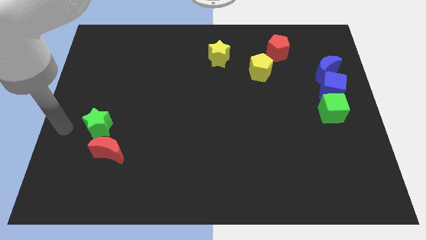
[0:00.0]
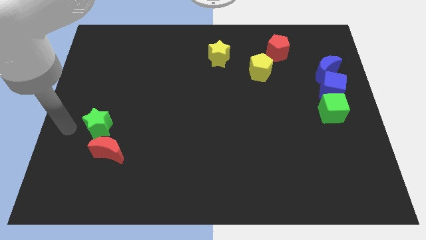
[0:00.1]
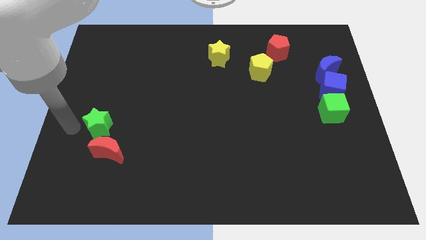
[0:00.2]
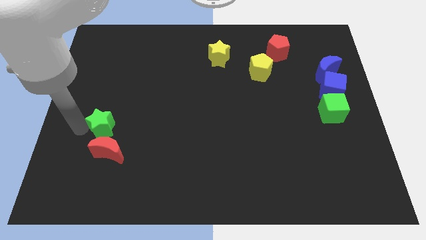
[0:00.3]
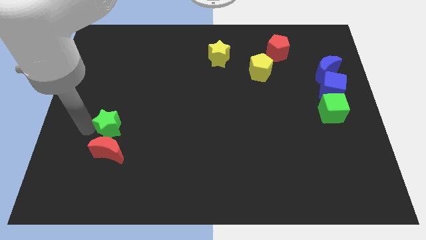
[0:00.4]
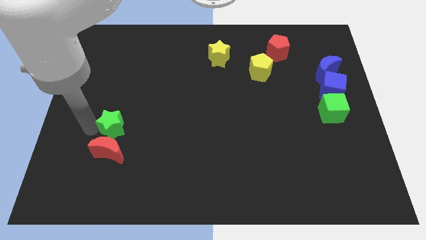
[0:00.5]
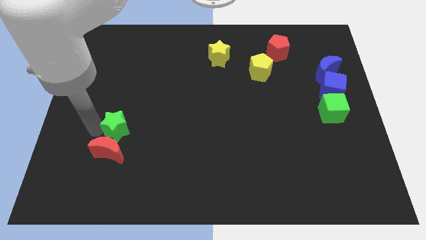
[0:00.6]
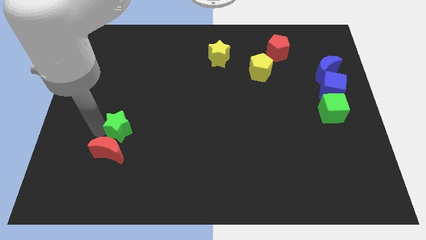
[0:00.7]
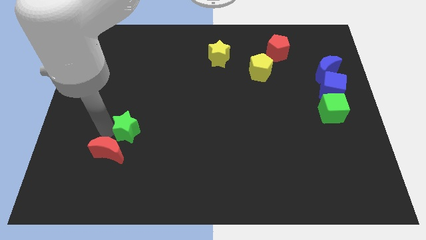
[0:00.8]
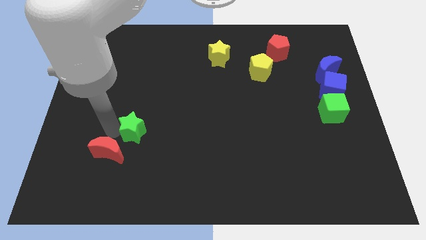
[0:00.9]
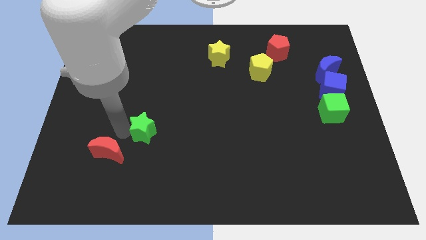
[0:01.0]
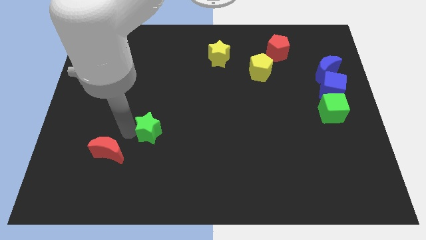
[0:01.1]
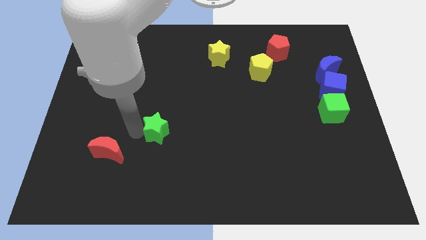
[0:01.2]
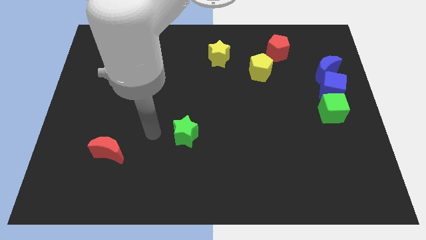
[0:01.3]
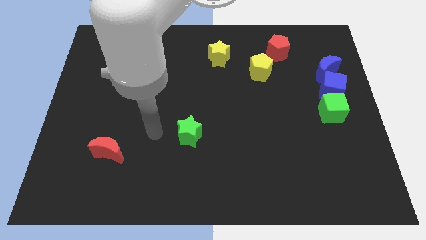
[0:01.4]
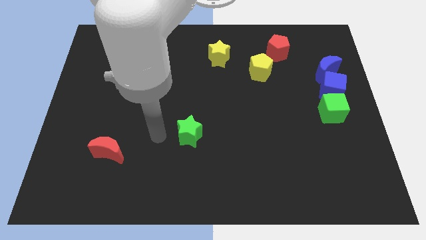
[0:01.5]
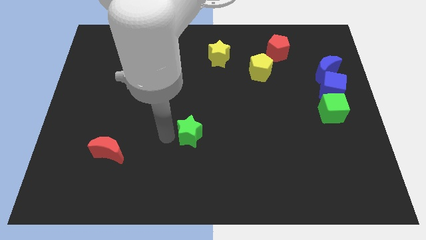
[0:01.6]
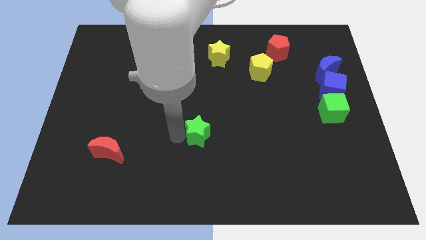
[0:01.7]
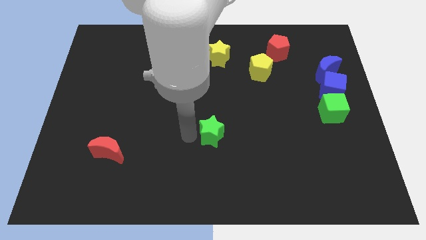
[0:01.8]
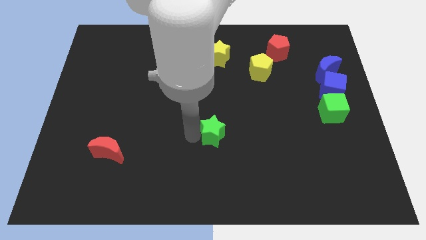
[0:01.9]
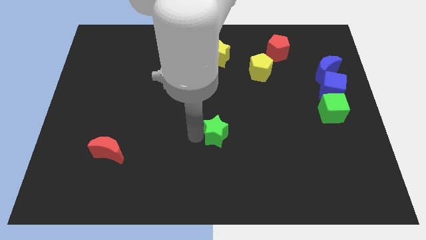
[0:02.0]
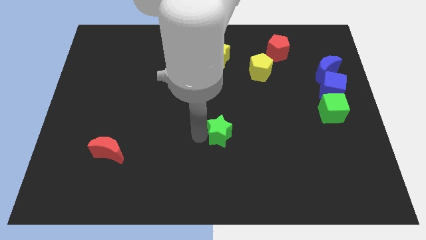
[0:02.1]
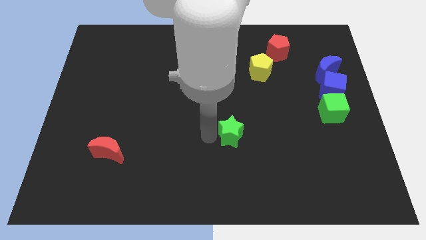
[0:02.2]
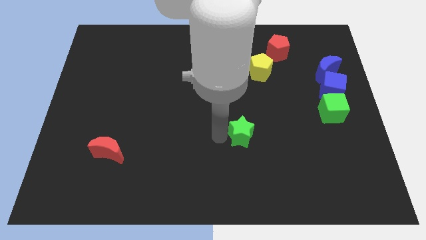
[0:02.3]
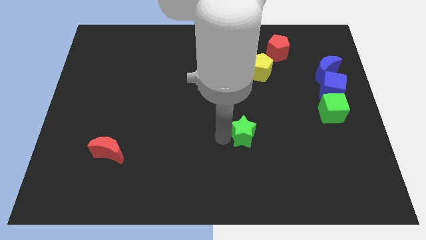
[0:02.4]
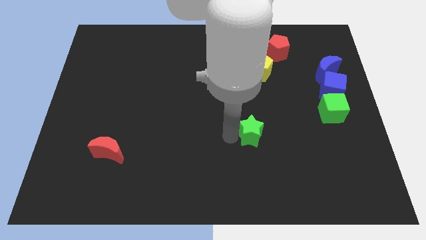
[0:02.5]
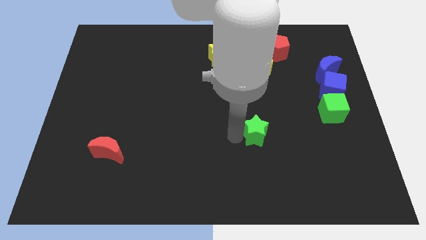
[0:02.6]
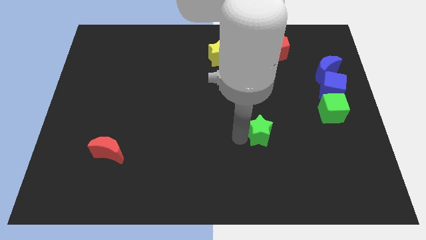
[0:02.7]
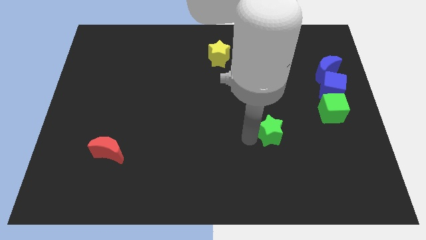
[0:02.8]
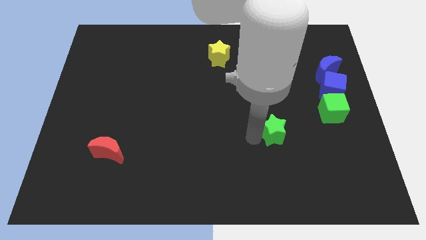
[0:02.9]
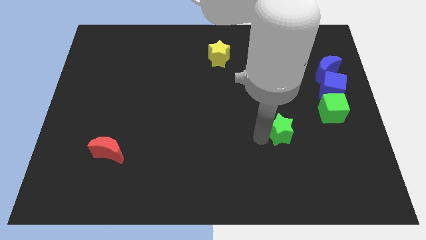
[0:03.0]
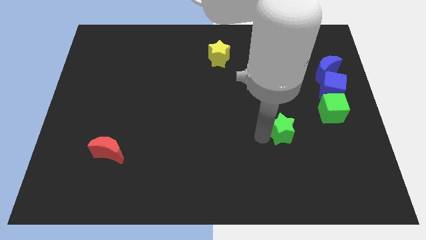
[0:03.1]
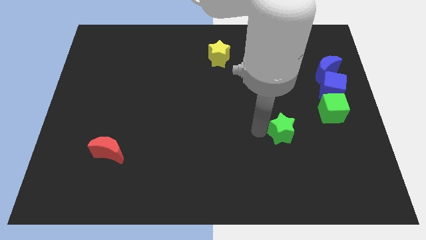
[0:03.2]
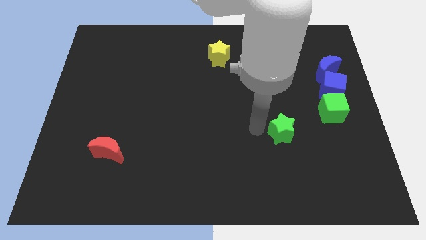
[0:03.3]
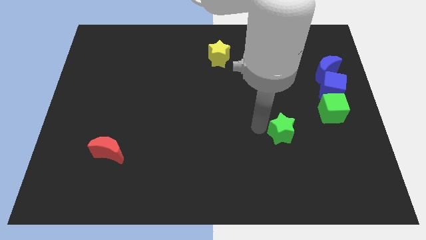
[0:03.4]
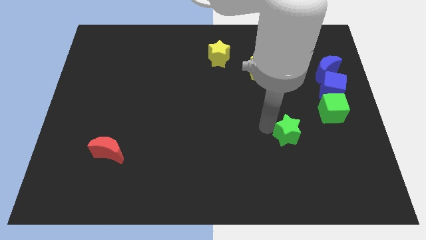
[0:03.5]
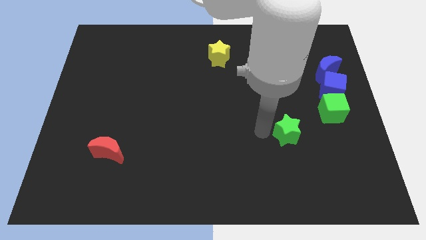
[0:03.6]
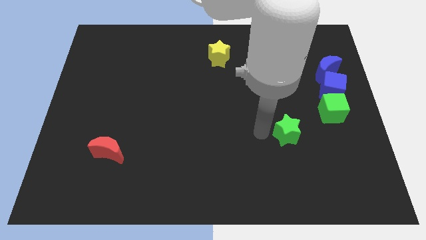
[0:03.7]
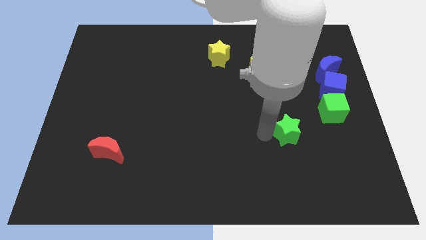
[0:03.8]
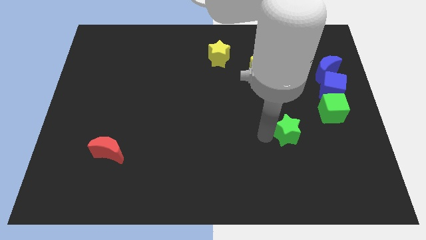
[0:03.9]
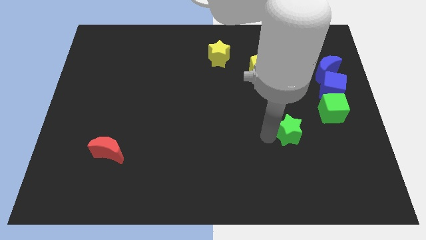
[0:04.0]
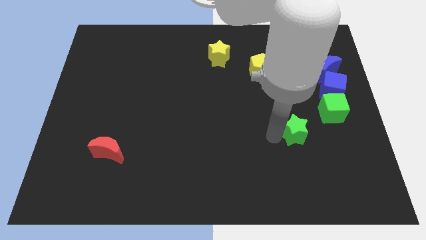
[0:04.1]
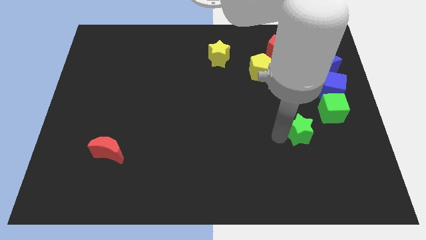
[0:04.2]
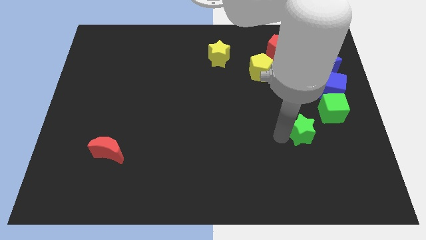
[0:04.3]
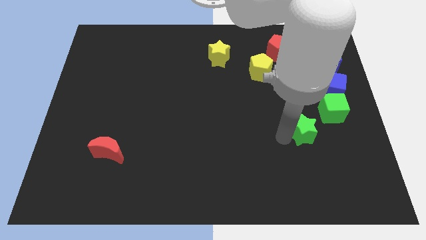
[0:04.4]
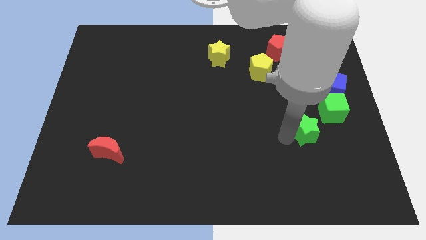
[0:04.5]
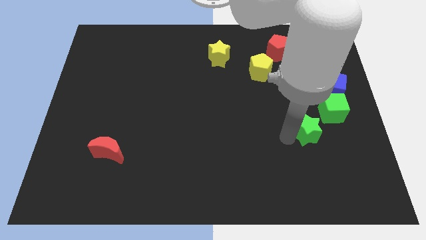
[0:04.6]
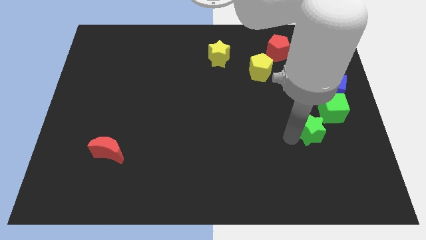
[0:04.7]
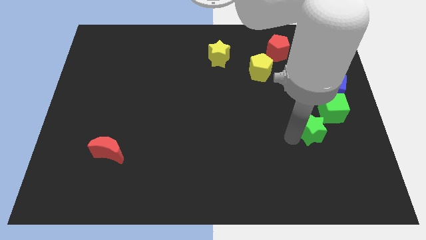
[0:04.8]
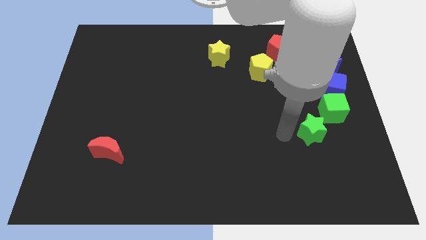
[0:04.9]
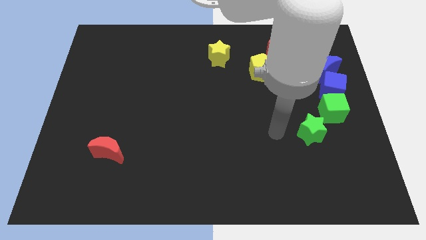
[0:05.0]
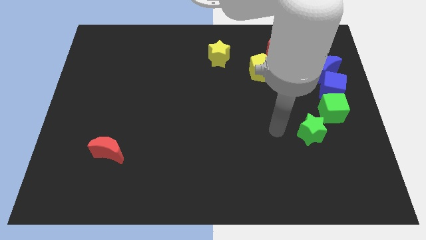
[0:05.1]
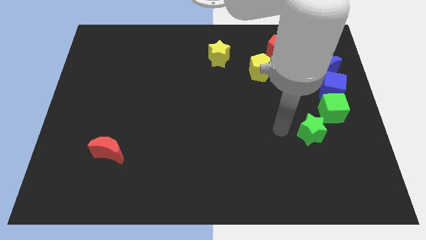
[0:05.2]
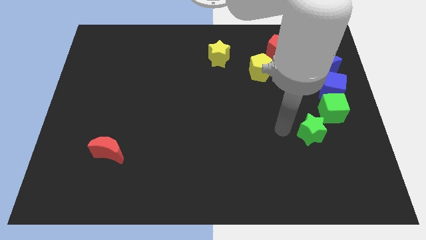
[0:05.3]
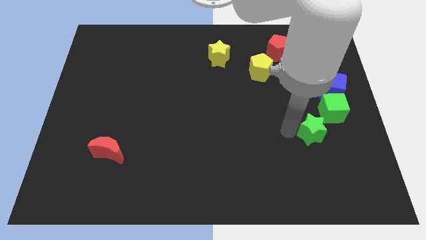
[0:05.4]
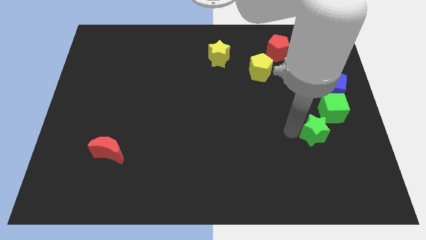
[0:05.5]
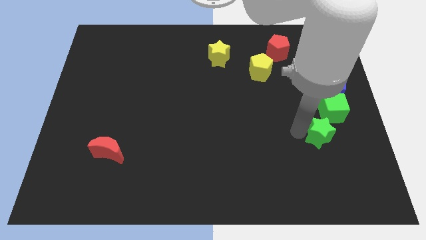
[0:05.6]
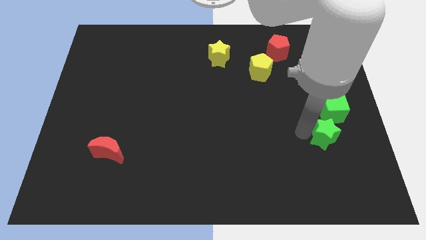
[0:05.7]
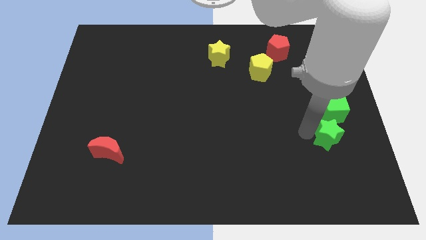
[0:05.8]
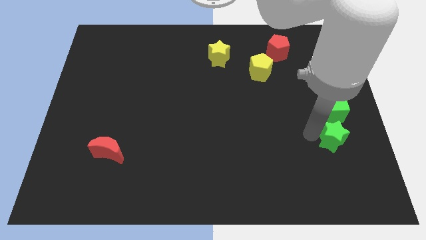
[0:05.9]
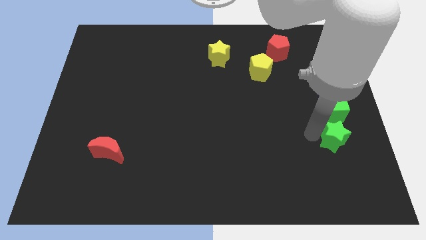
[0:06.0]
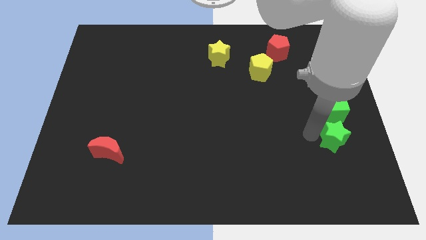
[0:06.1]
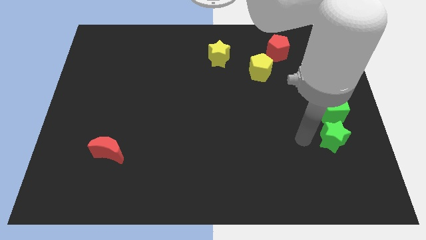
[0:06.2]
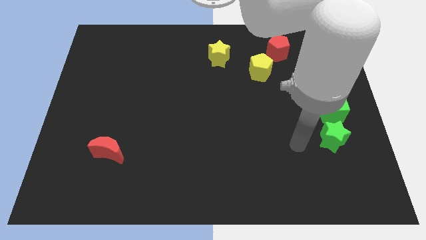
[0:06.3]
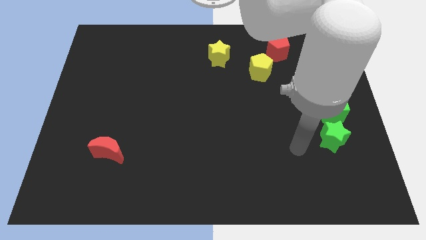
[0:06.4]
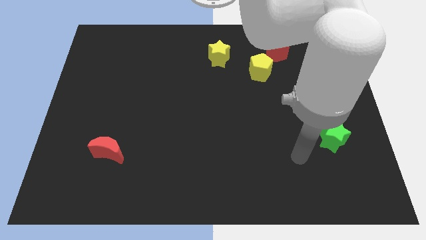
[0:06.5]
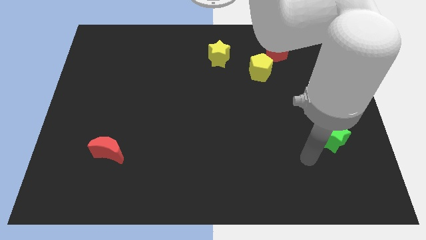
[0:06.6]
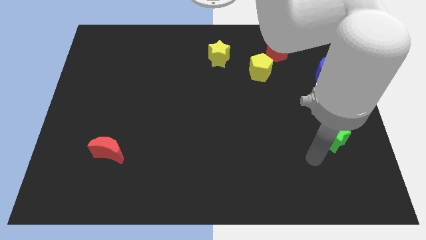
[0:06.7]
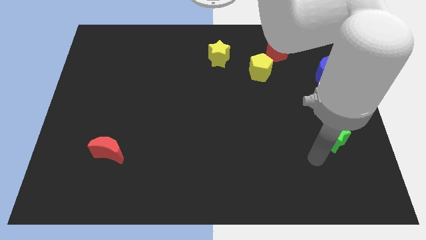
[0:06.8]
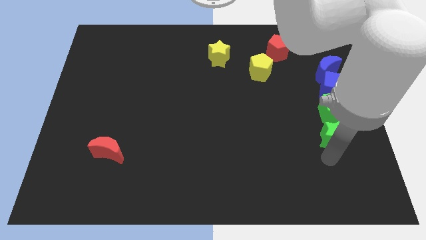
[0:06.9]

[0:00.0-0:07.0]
move the green star below the green cube

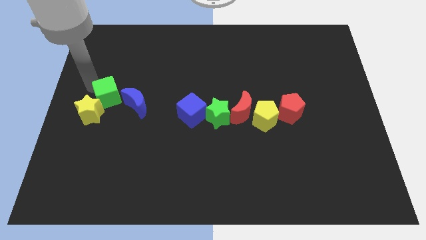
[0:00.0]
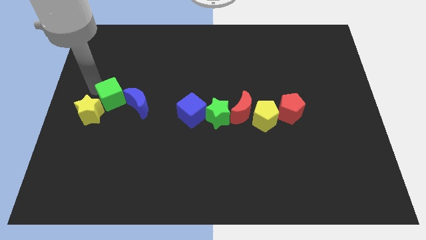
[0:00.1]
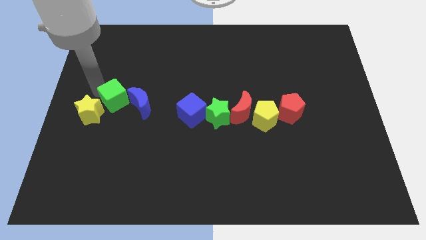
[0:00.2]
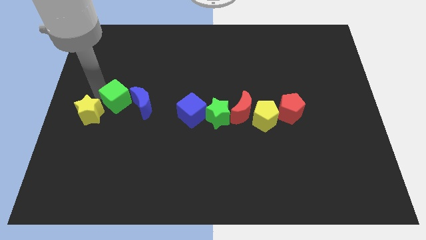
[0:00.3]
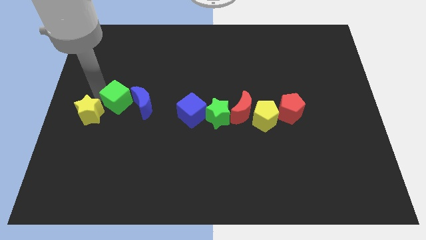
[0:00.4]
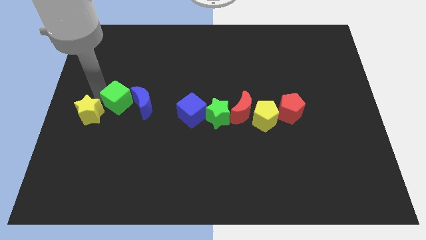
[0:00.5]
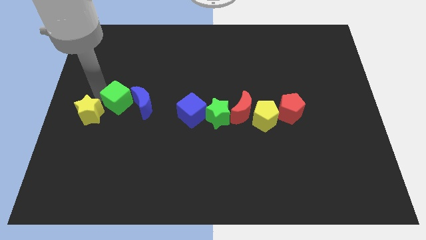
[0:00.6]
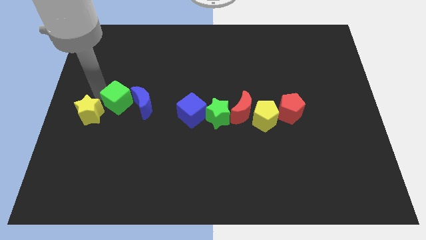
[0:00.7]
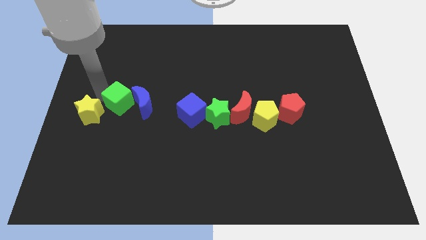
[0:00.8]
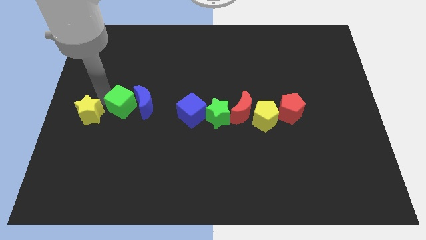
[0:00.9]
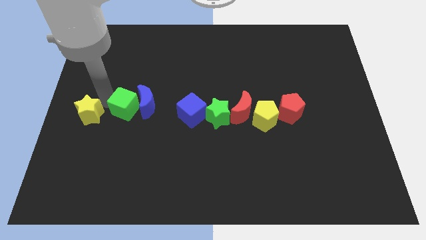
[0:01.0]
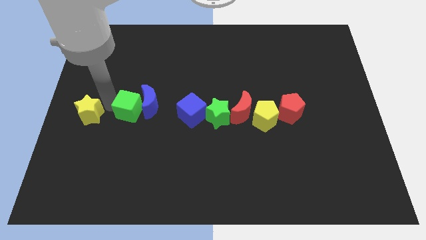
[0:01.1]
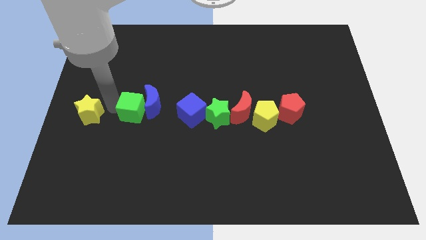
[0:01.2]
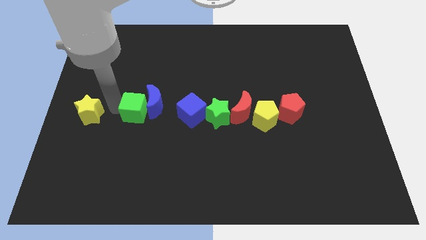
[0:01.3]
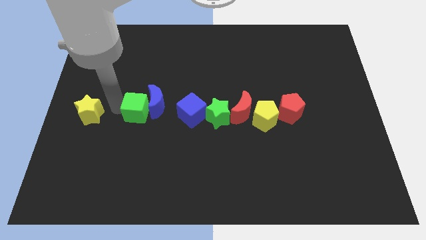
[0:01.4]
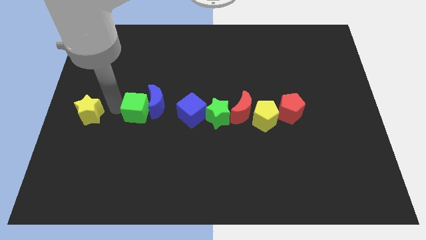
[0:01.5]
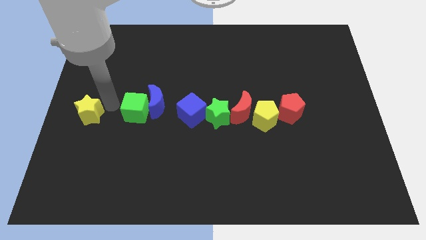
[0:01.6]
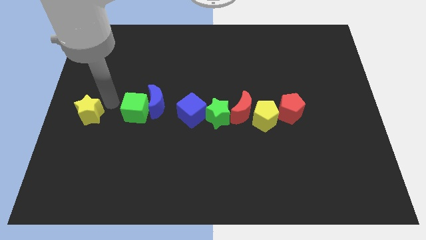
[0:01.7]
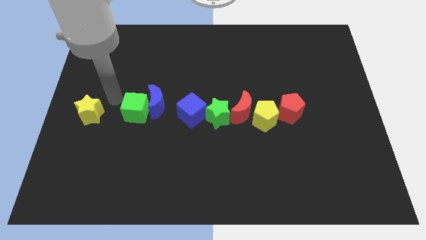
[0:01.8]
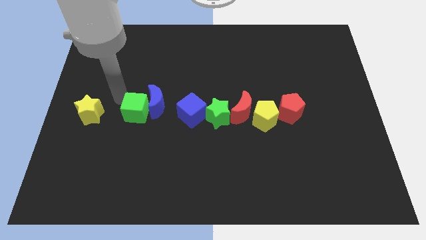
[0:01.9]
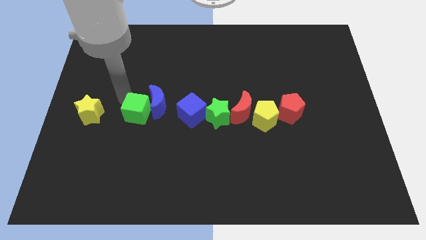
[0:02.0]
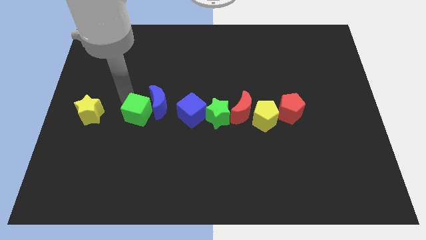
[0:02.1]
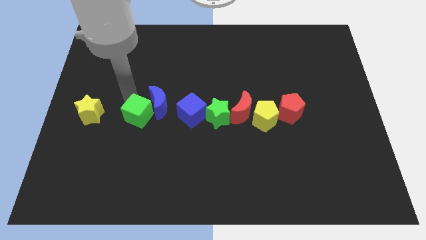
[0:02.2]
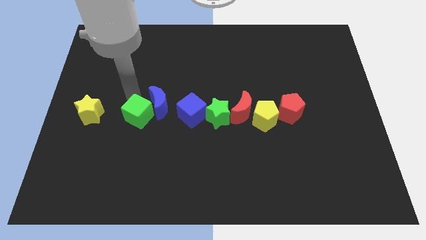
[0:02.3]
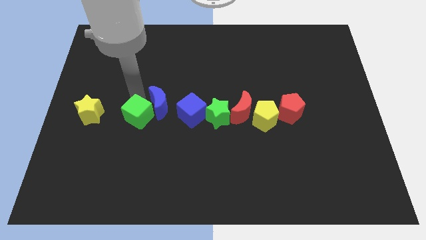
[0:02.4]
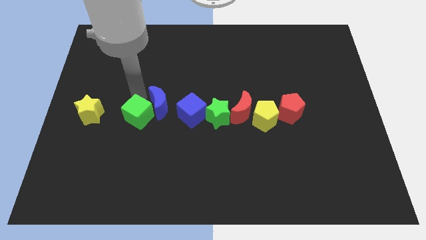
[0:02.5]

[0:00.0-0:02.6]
move the green cube into the blue moon
